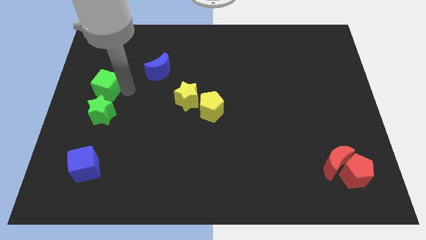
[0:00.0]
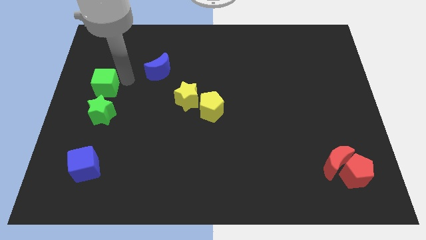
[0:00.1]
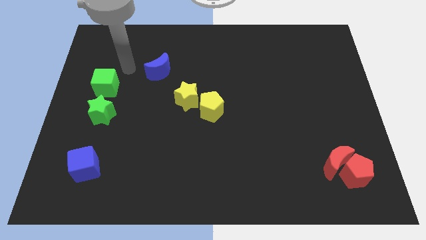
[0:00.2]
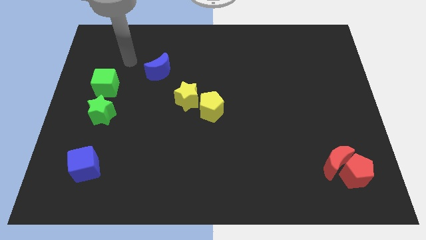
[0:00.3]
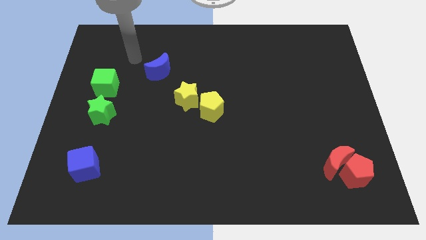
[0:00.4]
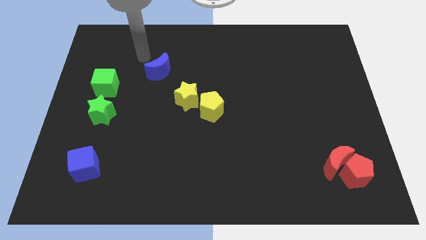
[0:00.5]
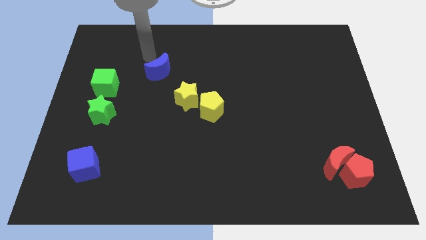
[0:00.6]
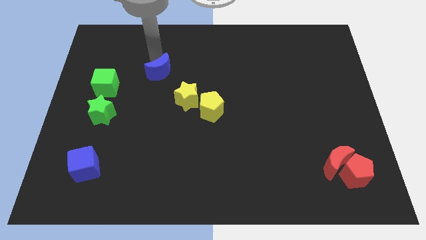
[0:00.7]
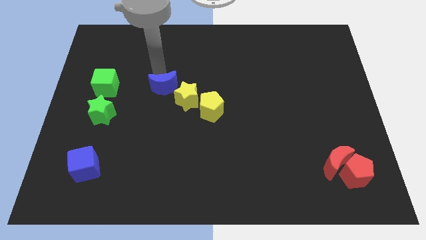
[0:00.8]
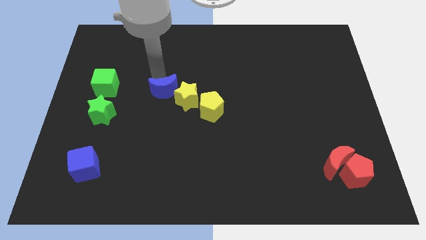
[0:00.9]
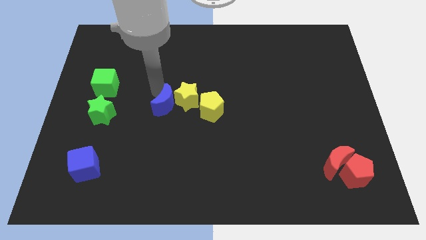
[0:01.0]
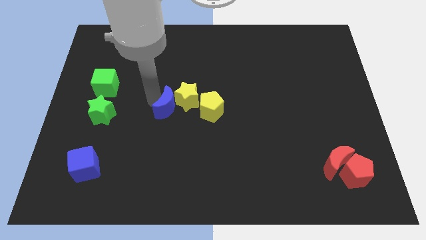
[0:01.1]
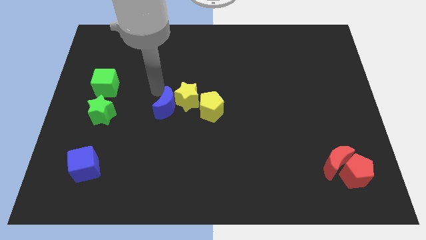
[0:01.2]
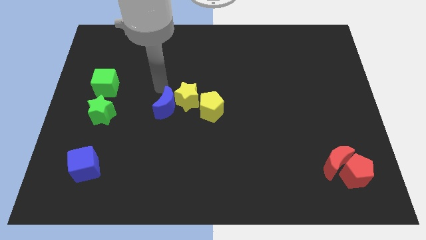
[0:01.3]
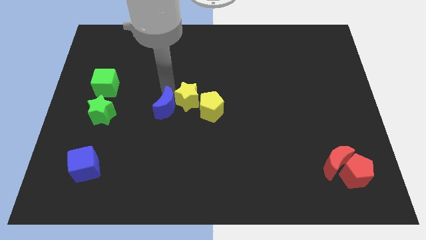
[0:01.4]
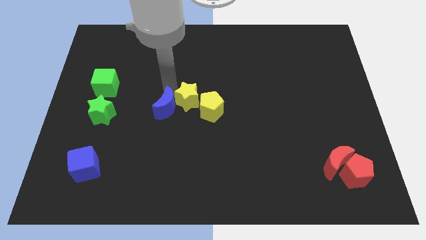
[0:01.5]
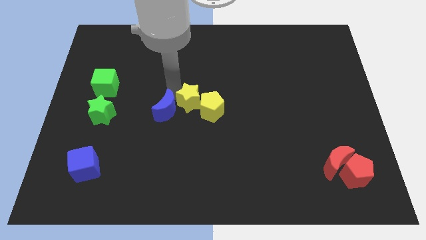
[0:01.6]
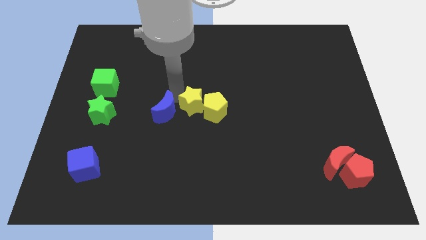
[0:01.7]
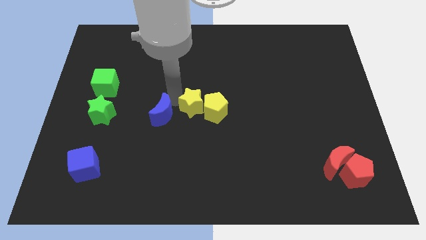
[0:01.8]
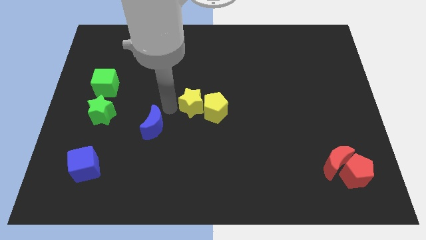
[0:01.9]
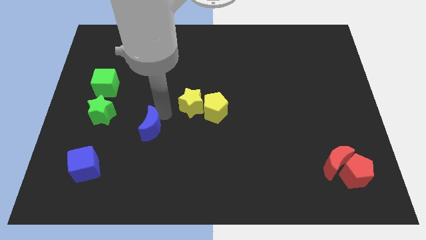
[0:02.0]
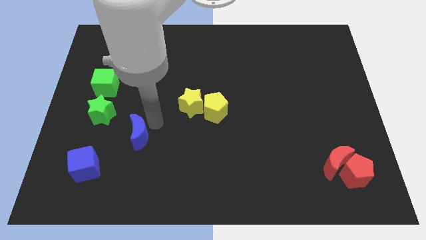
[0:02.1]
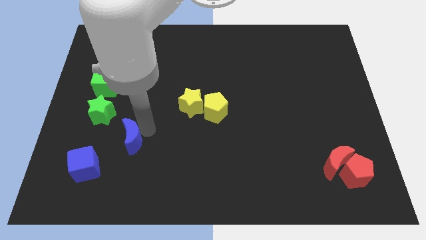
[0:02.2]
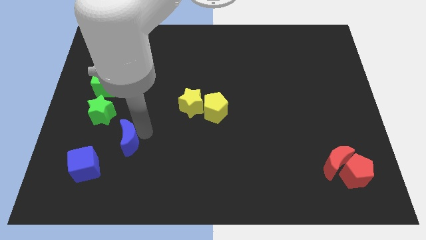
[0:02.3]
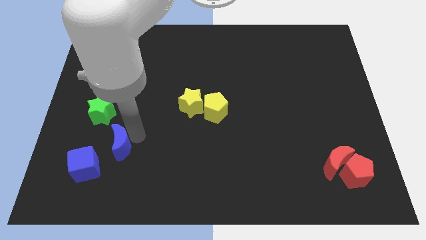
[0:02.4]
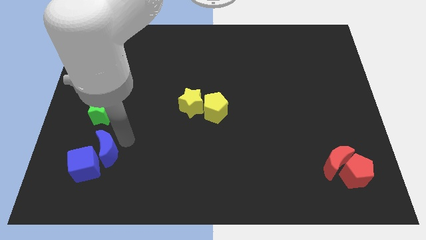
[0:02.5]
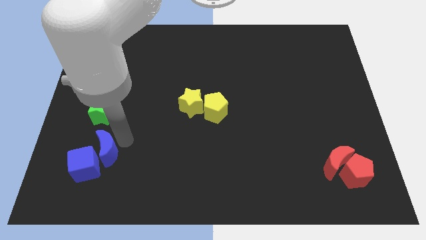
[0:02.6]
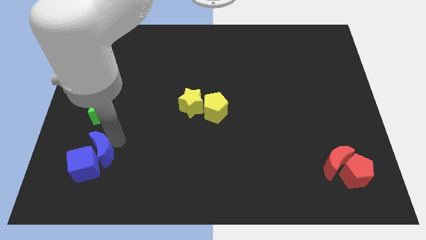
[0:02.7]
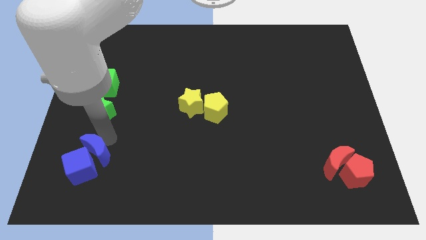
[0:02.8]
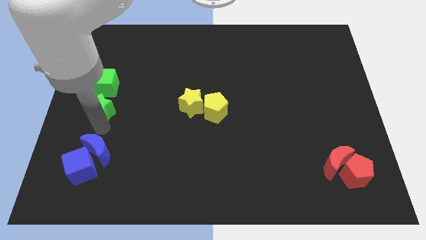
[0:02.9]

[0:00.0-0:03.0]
move the blue crescent into the bluecube

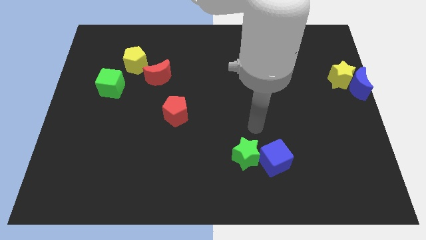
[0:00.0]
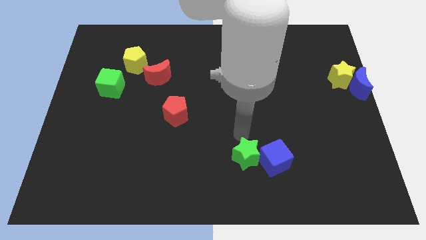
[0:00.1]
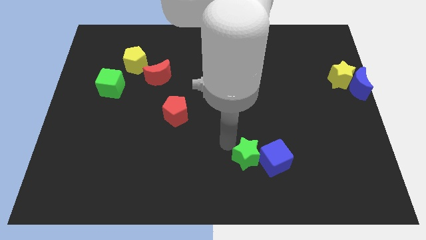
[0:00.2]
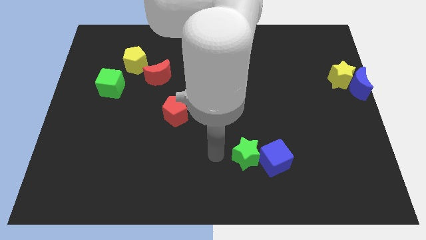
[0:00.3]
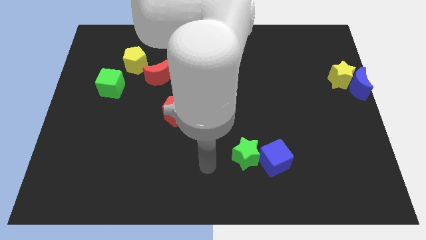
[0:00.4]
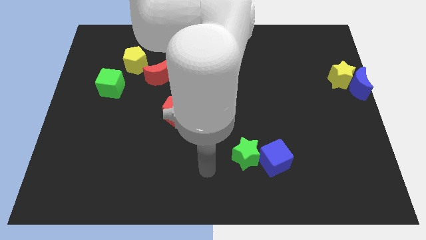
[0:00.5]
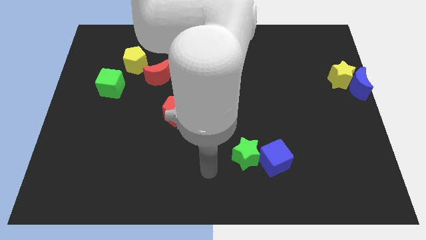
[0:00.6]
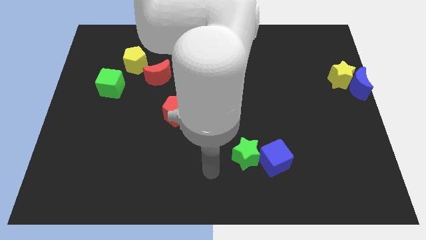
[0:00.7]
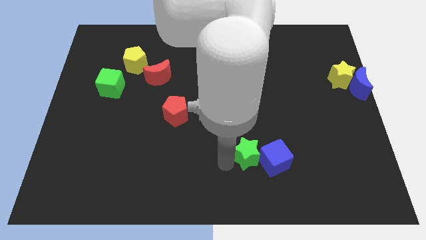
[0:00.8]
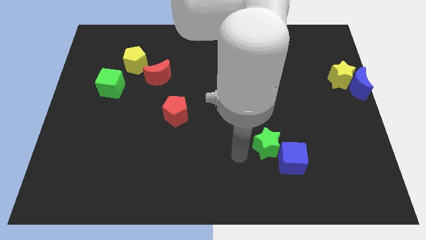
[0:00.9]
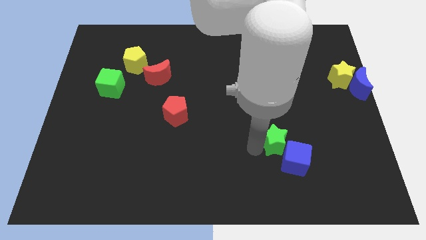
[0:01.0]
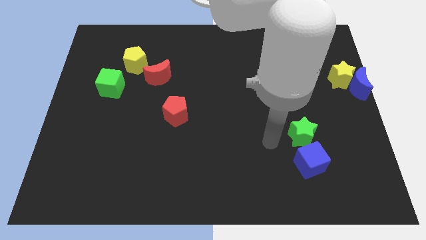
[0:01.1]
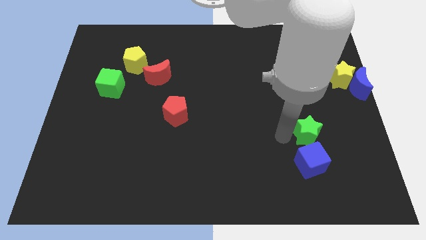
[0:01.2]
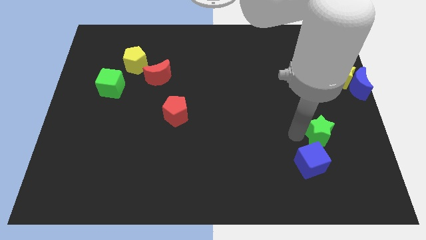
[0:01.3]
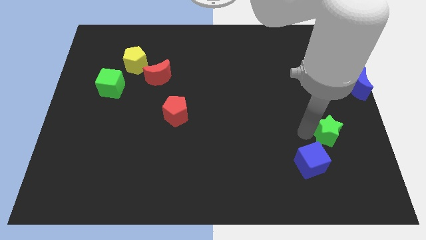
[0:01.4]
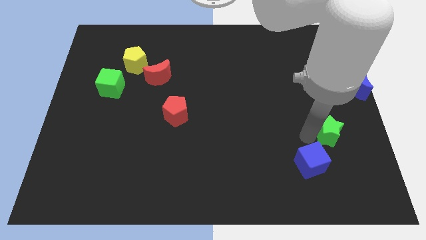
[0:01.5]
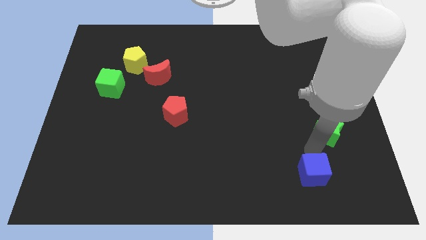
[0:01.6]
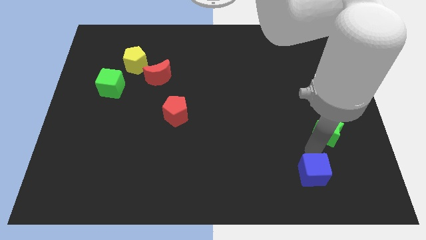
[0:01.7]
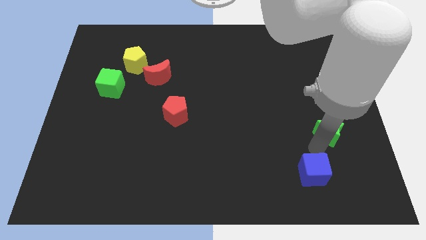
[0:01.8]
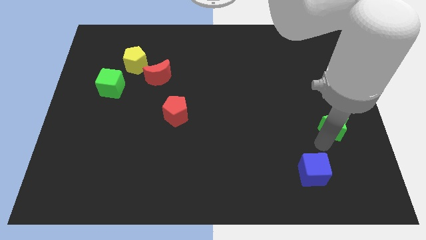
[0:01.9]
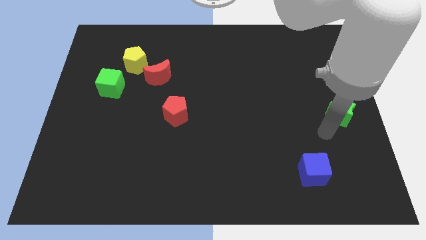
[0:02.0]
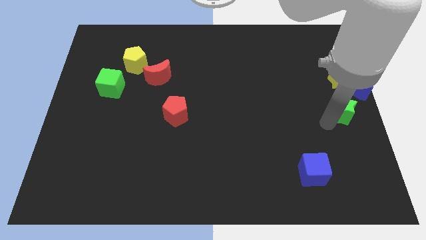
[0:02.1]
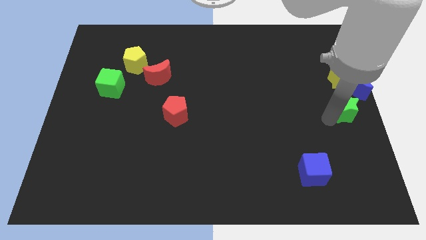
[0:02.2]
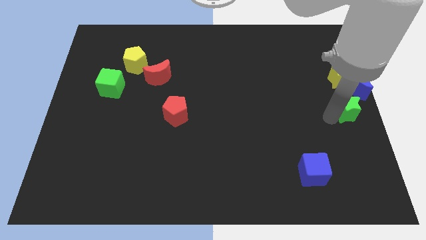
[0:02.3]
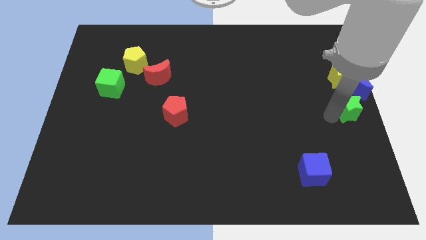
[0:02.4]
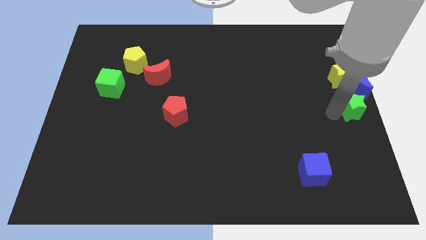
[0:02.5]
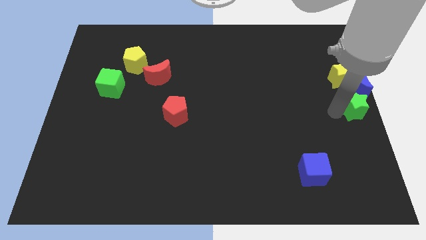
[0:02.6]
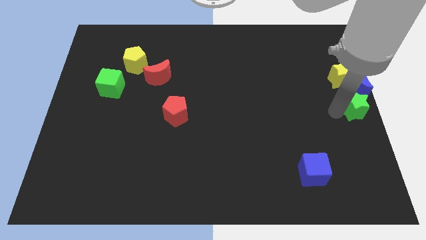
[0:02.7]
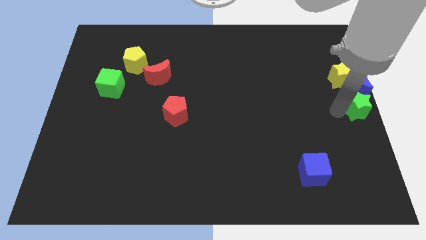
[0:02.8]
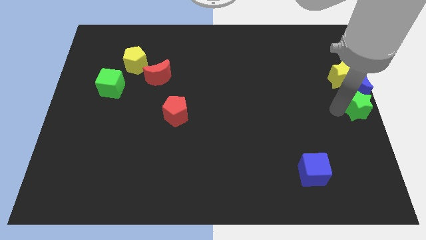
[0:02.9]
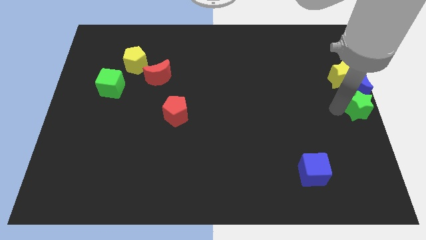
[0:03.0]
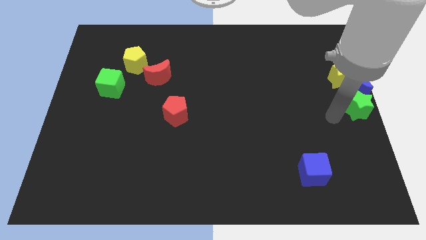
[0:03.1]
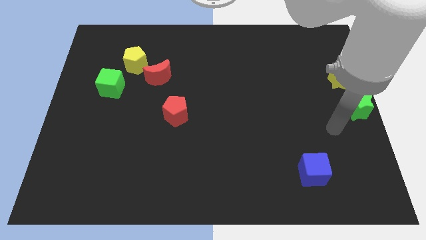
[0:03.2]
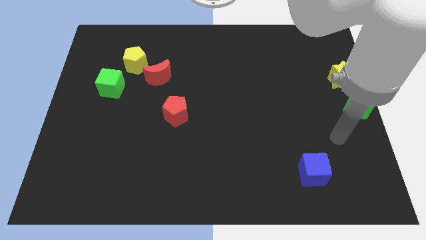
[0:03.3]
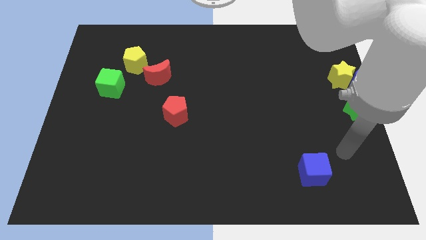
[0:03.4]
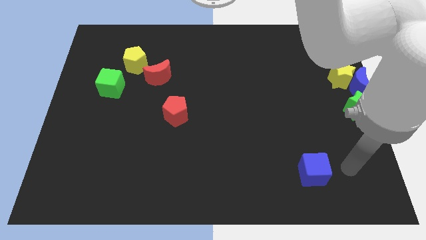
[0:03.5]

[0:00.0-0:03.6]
push the green star to the bottom side of the blue moon

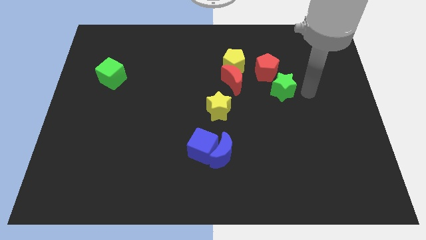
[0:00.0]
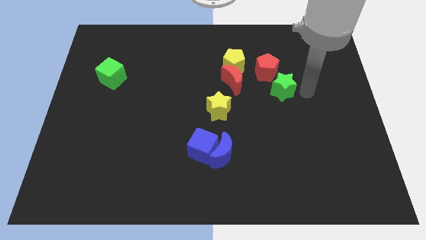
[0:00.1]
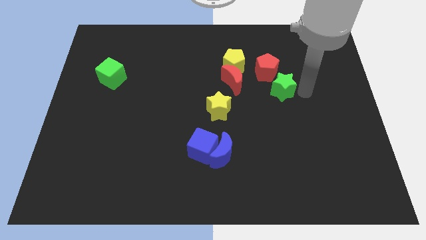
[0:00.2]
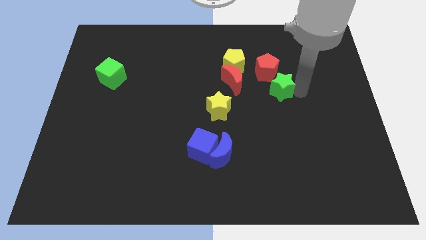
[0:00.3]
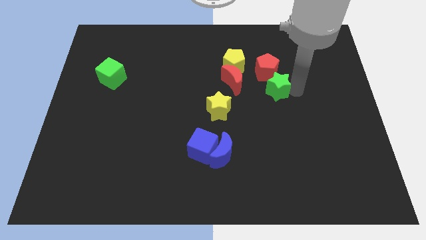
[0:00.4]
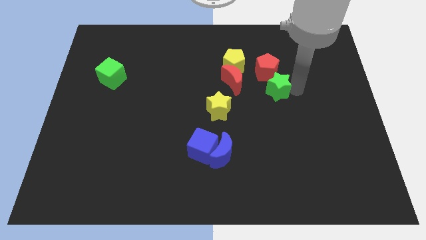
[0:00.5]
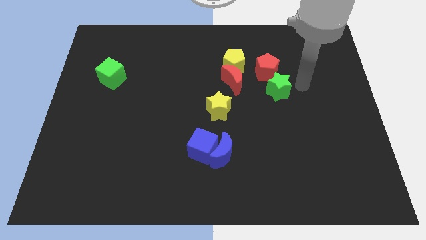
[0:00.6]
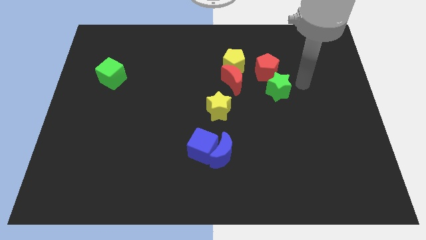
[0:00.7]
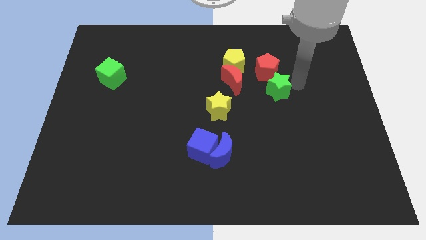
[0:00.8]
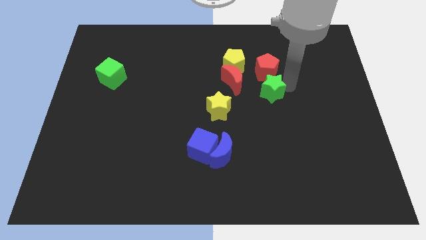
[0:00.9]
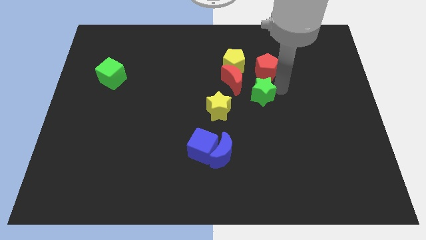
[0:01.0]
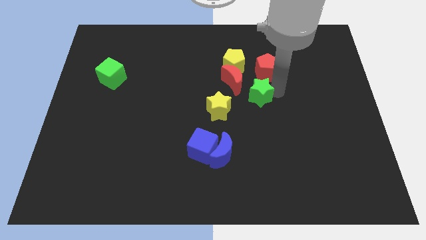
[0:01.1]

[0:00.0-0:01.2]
push the green star below the red pentagon

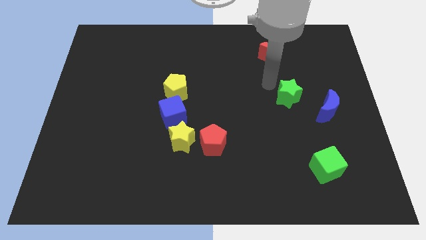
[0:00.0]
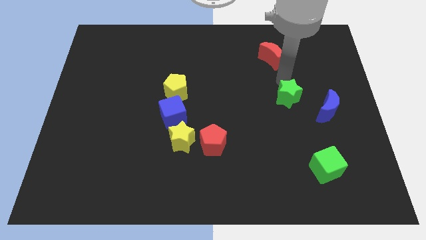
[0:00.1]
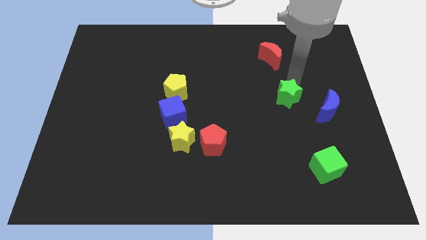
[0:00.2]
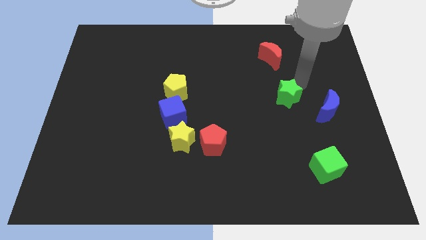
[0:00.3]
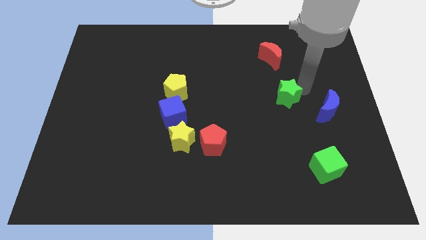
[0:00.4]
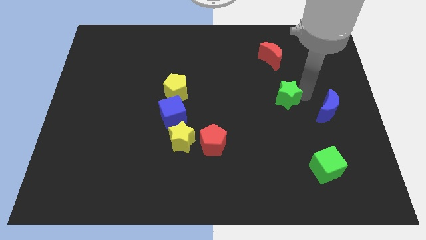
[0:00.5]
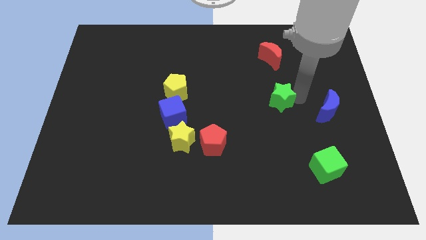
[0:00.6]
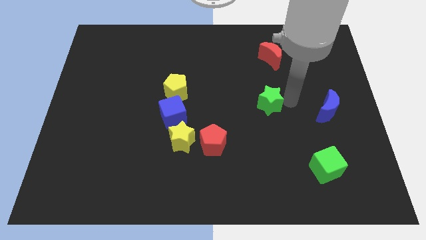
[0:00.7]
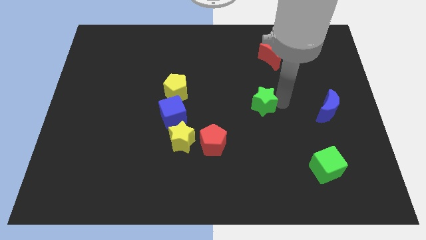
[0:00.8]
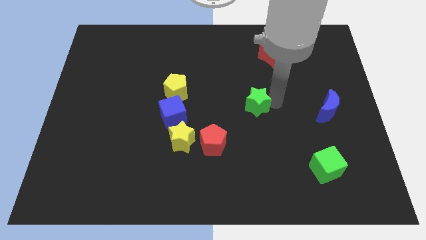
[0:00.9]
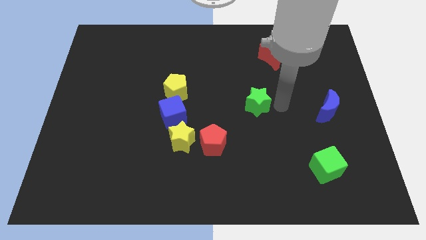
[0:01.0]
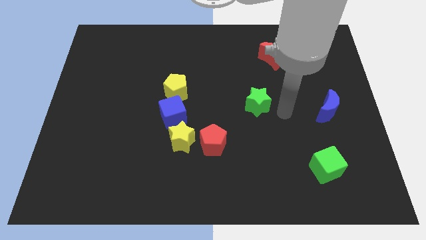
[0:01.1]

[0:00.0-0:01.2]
push the green star towards the center
